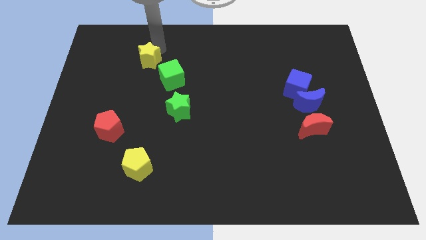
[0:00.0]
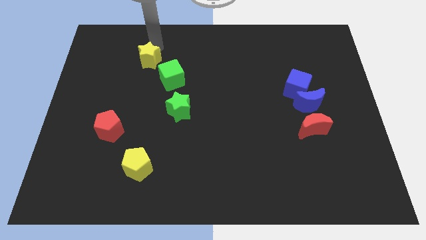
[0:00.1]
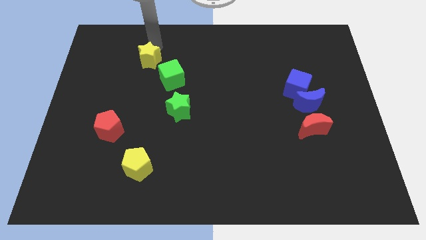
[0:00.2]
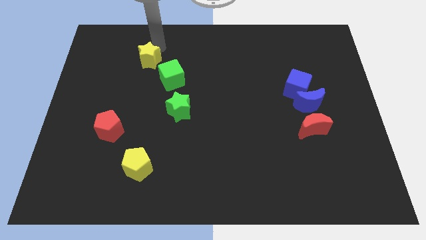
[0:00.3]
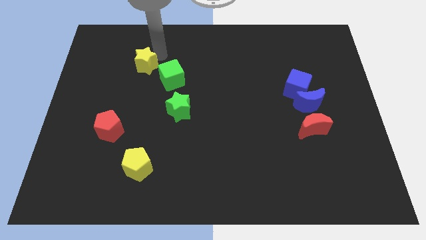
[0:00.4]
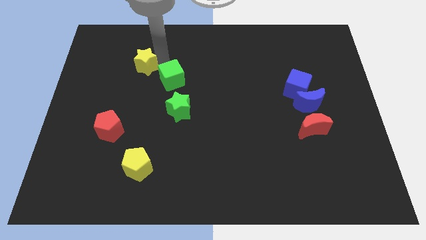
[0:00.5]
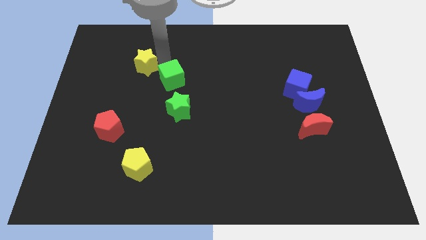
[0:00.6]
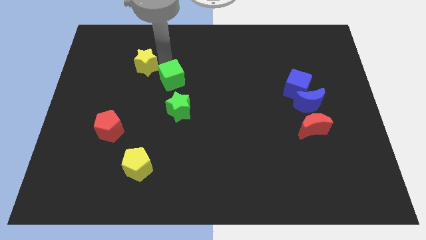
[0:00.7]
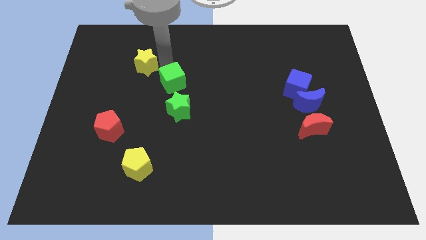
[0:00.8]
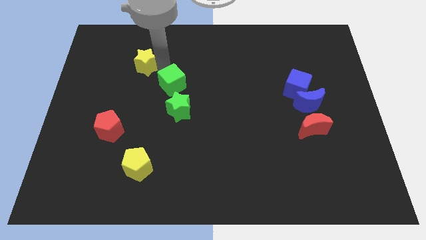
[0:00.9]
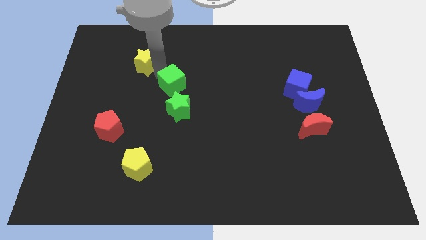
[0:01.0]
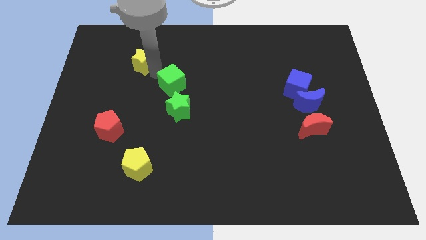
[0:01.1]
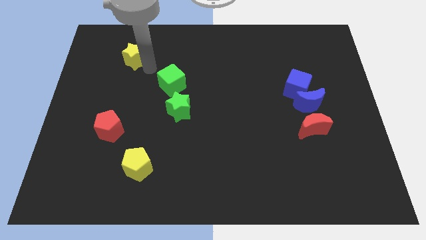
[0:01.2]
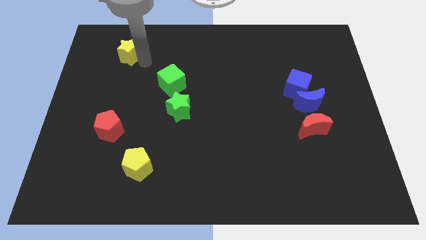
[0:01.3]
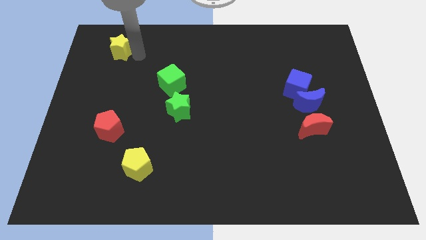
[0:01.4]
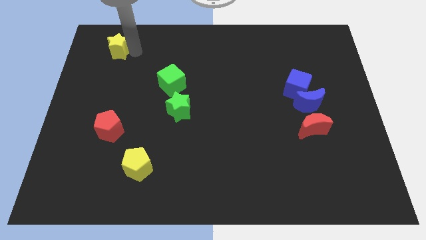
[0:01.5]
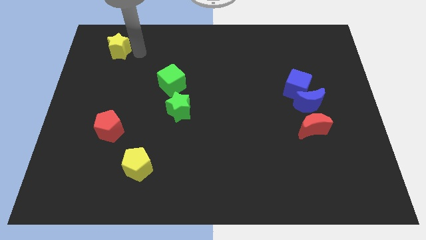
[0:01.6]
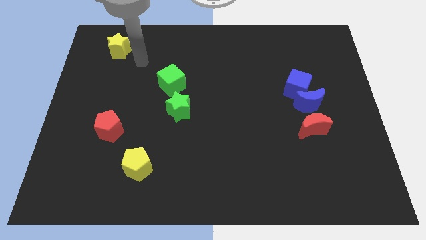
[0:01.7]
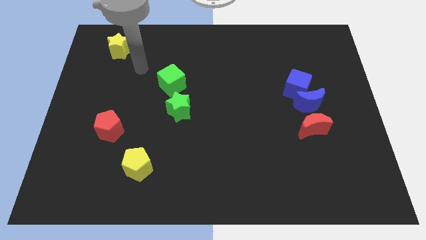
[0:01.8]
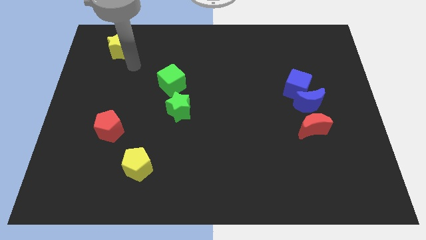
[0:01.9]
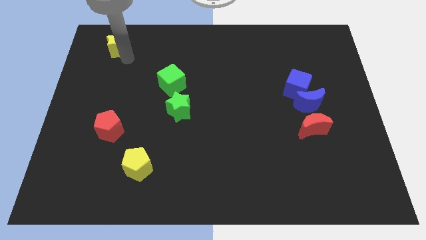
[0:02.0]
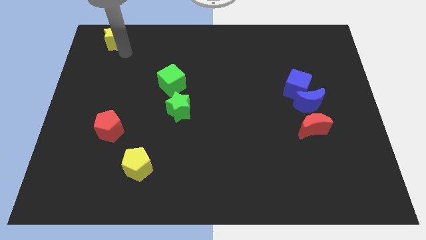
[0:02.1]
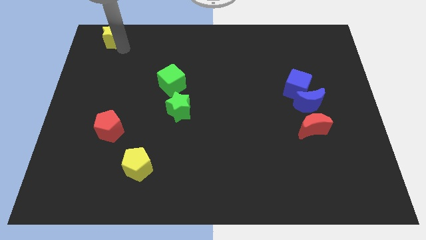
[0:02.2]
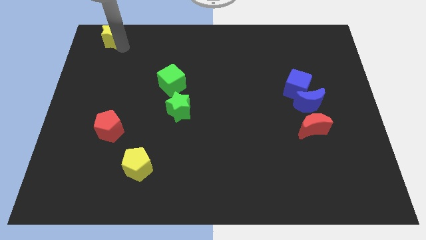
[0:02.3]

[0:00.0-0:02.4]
drag the yellow star to the top left side of the board

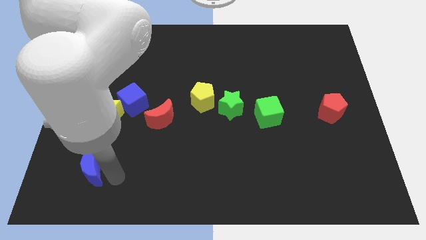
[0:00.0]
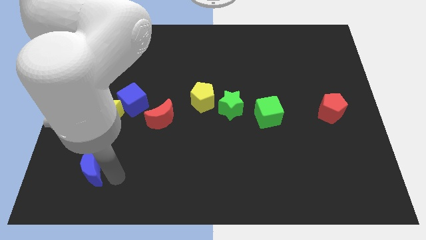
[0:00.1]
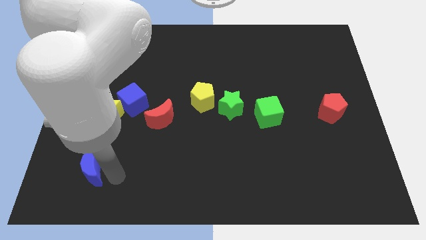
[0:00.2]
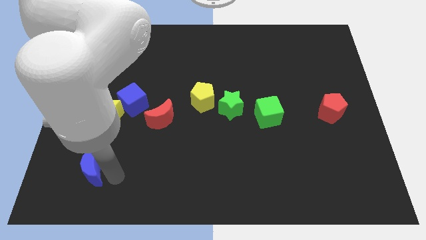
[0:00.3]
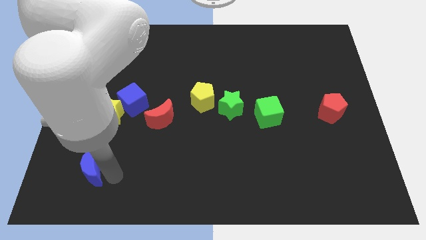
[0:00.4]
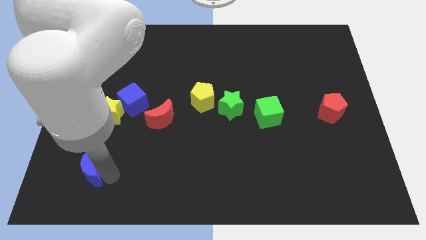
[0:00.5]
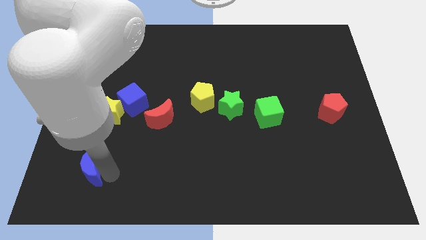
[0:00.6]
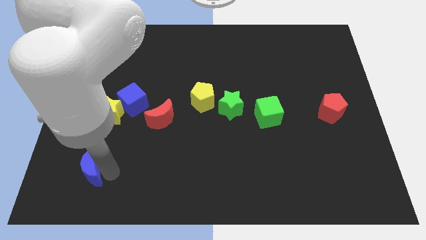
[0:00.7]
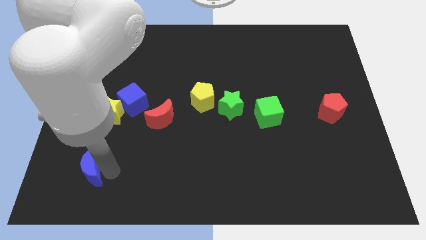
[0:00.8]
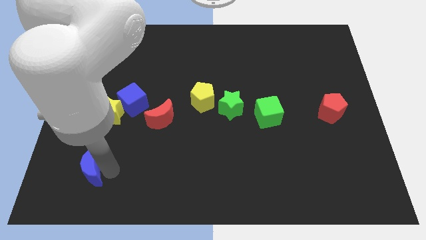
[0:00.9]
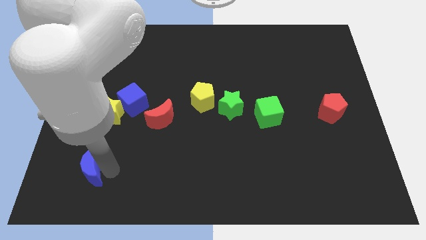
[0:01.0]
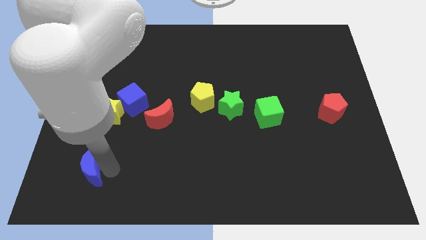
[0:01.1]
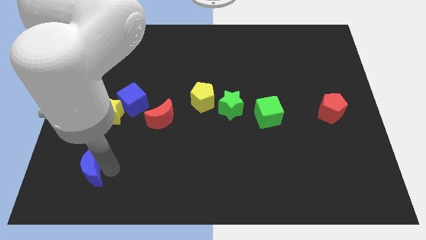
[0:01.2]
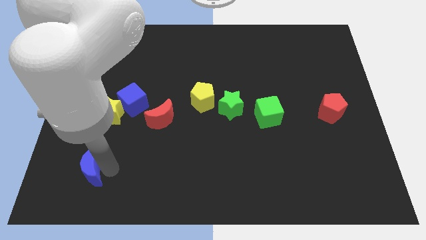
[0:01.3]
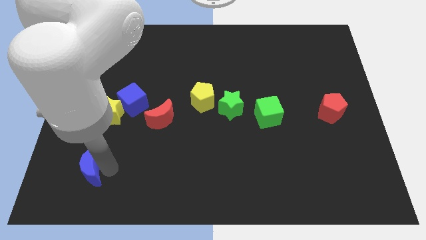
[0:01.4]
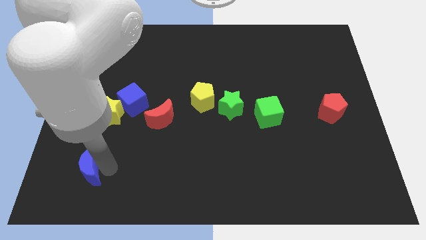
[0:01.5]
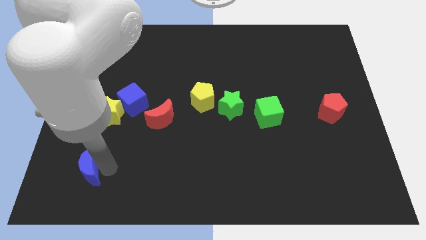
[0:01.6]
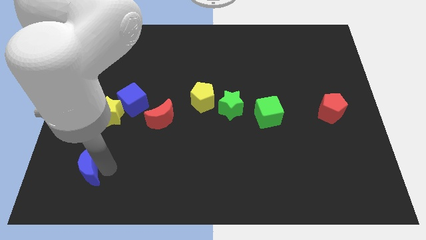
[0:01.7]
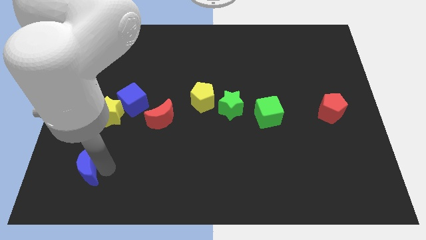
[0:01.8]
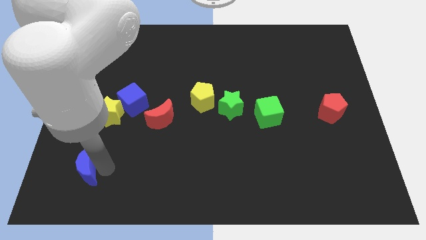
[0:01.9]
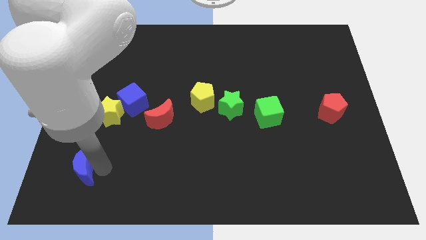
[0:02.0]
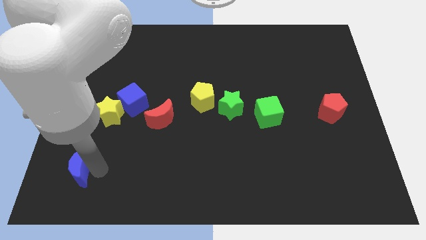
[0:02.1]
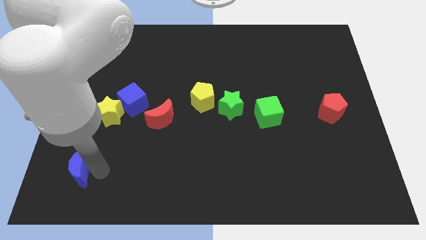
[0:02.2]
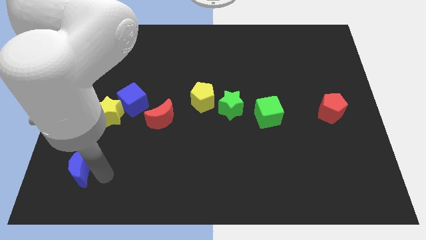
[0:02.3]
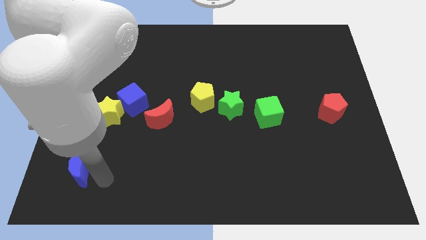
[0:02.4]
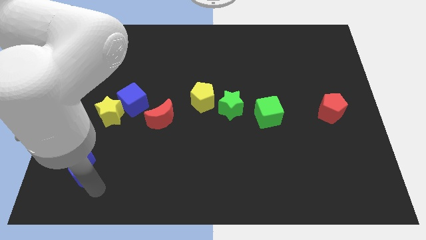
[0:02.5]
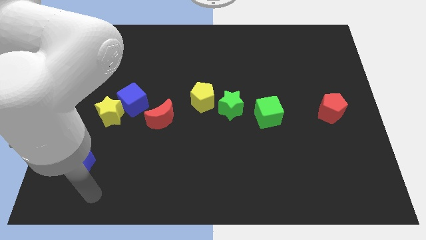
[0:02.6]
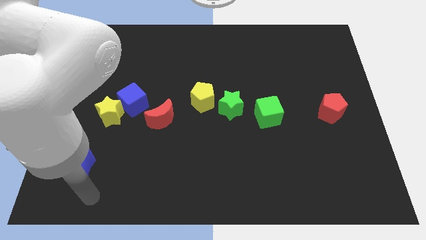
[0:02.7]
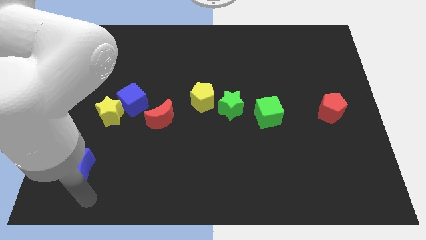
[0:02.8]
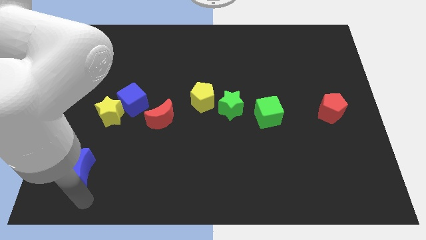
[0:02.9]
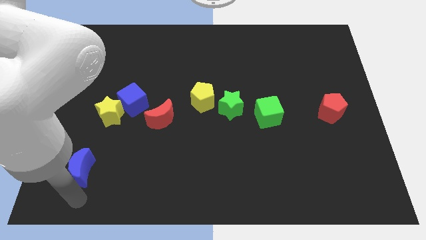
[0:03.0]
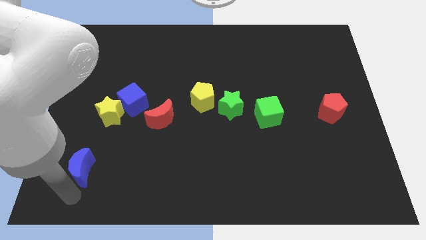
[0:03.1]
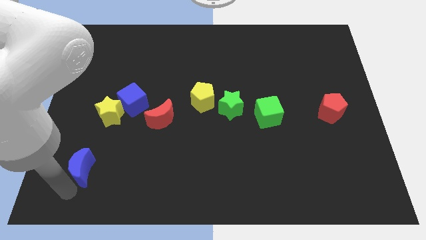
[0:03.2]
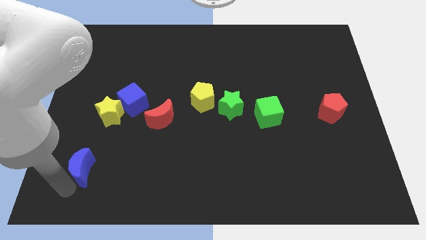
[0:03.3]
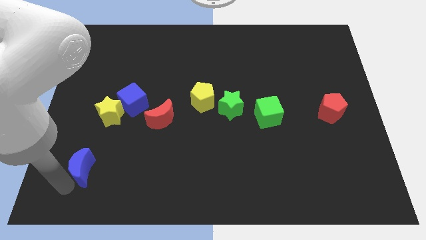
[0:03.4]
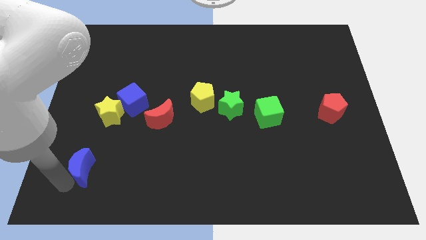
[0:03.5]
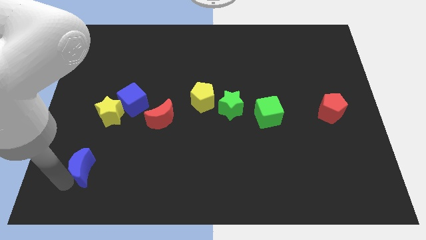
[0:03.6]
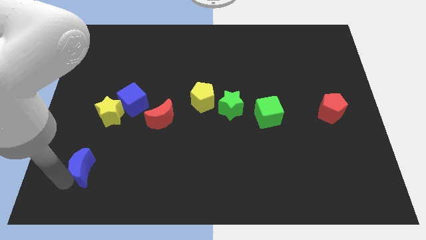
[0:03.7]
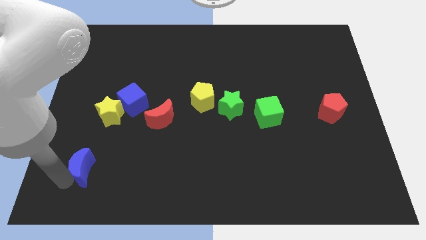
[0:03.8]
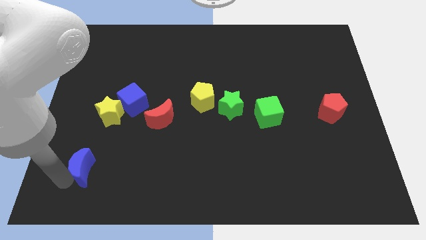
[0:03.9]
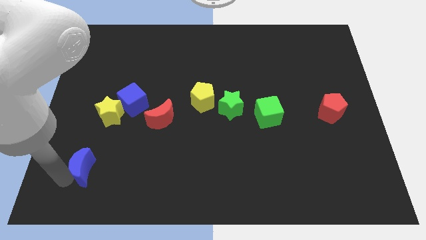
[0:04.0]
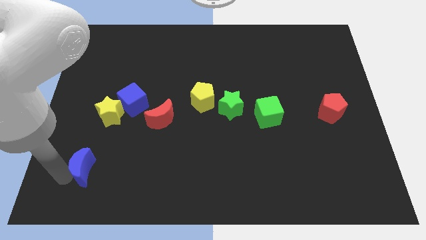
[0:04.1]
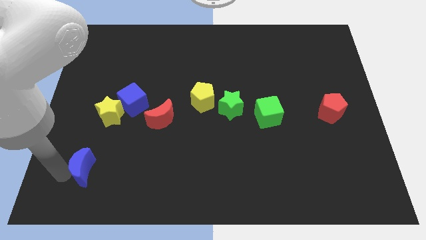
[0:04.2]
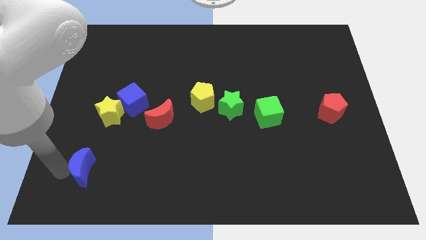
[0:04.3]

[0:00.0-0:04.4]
slightly push the blue moon to the left of the board

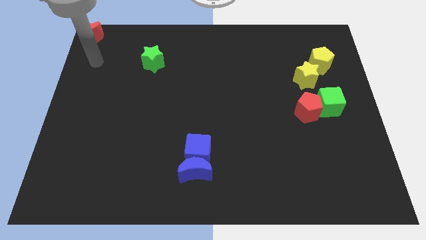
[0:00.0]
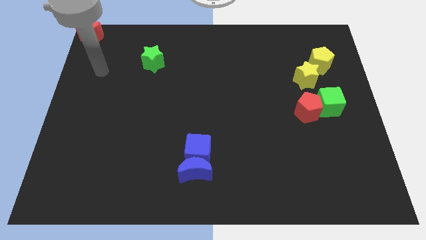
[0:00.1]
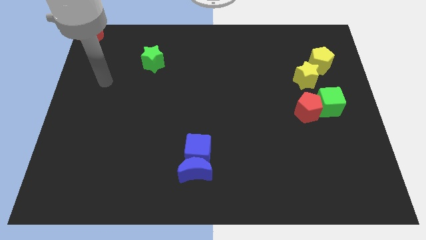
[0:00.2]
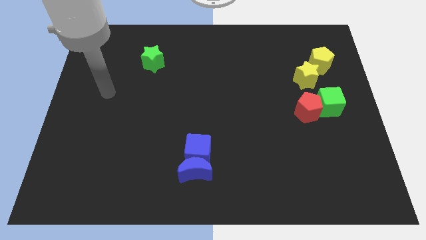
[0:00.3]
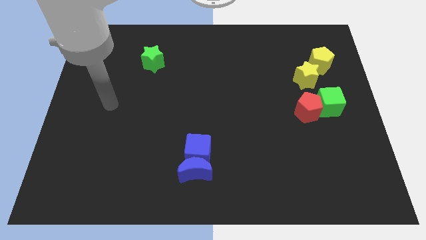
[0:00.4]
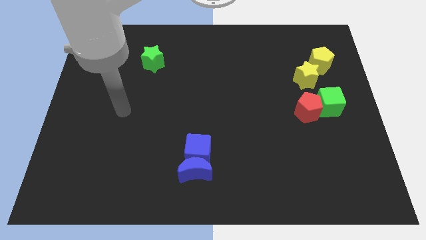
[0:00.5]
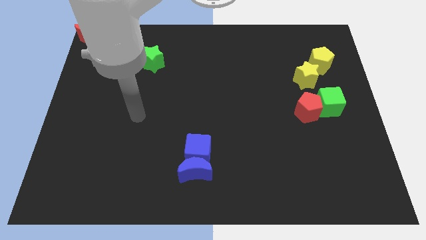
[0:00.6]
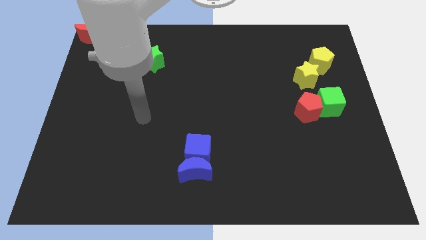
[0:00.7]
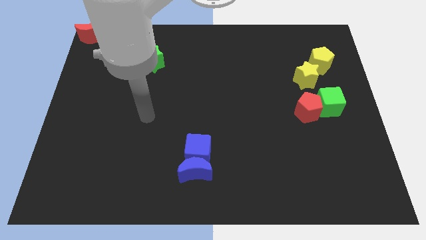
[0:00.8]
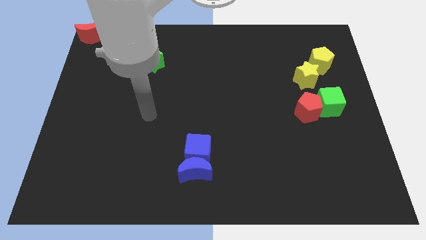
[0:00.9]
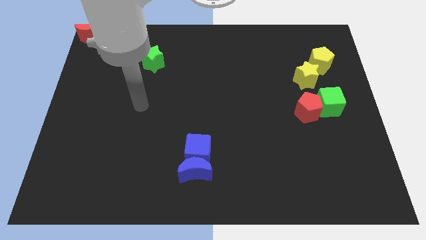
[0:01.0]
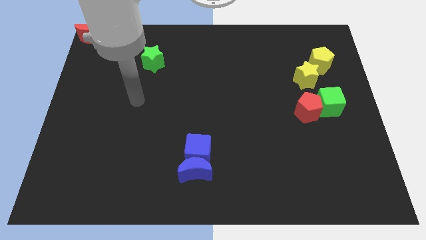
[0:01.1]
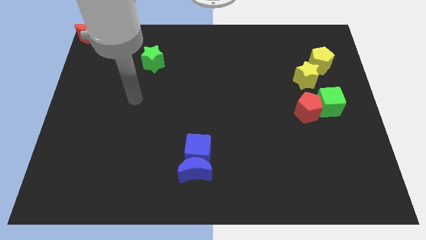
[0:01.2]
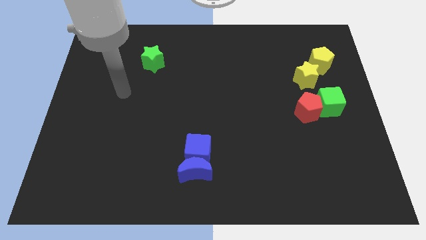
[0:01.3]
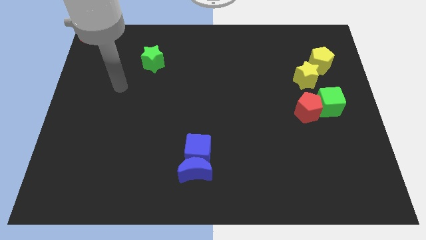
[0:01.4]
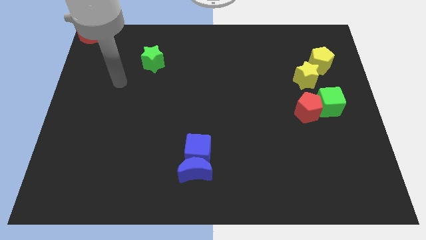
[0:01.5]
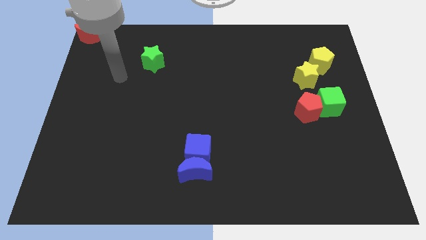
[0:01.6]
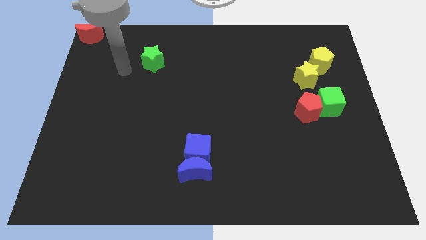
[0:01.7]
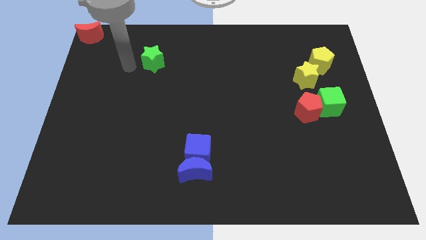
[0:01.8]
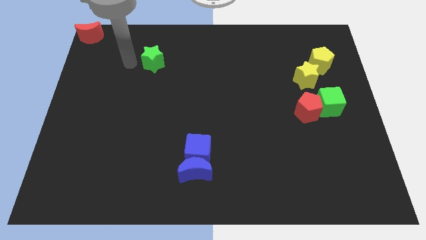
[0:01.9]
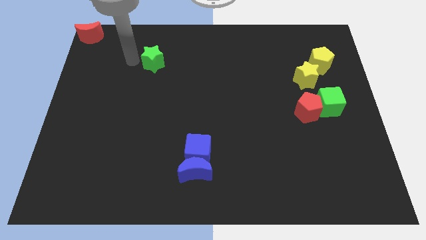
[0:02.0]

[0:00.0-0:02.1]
go close to the left side of the green star

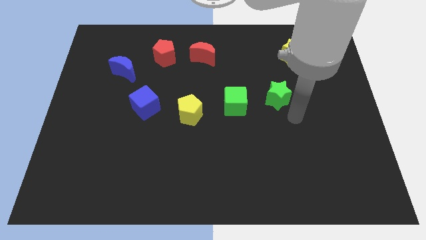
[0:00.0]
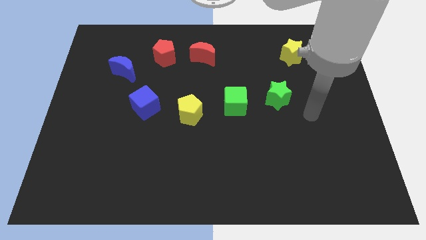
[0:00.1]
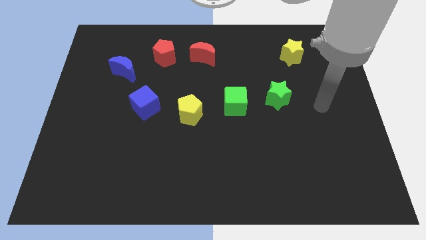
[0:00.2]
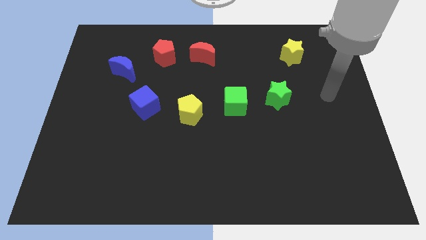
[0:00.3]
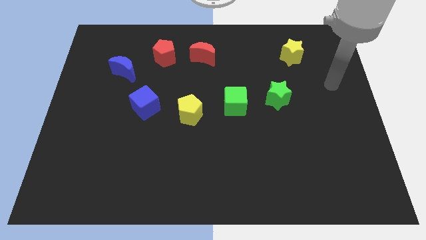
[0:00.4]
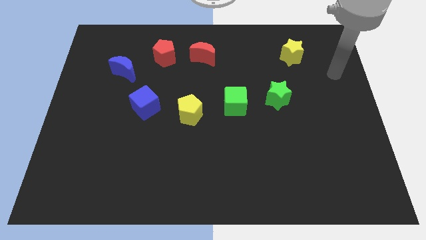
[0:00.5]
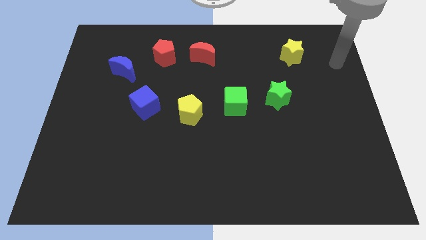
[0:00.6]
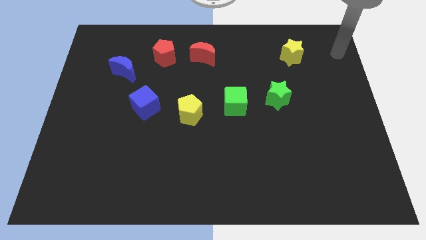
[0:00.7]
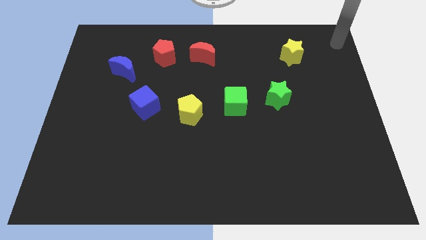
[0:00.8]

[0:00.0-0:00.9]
place your arm at top right corner of the board
